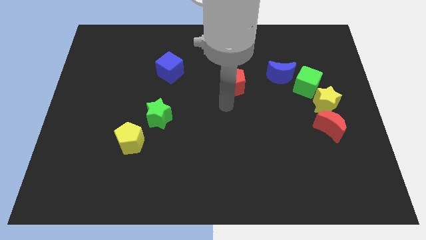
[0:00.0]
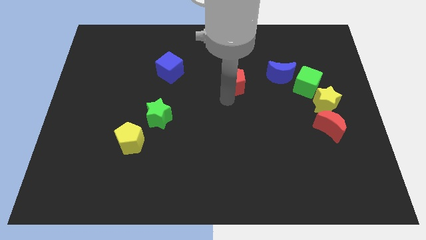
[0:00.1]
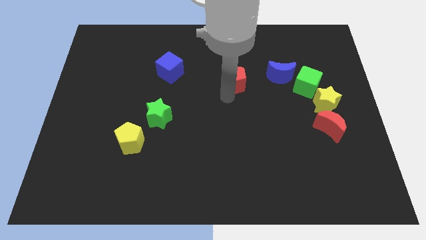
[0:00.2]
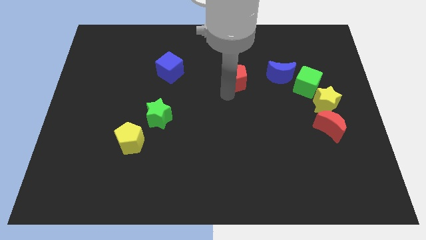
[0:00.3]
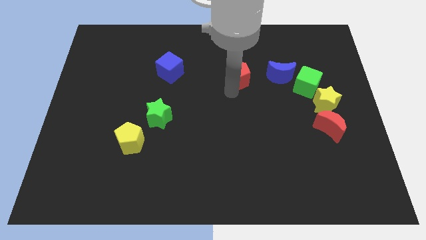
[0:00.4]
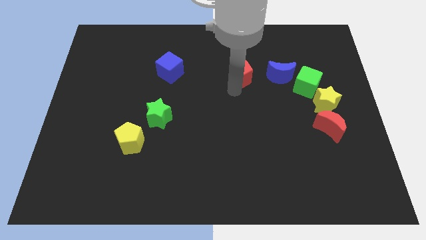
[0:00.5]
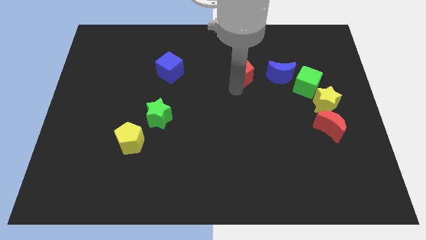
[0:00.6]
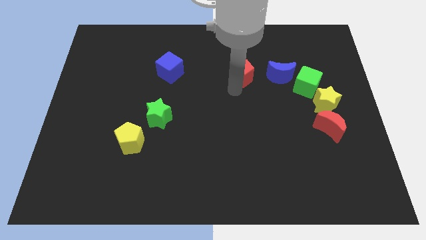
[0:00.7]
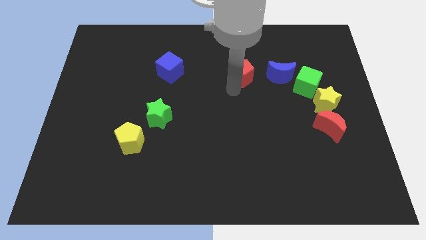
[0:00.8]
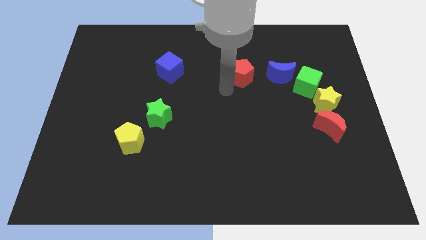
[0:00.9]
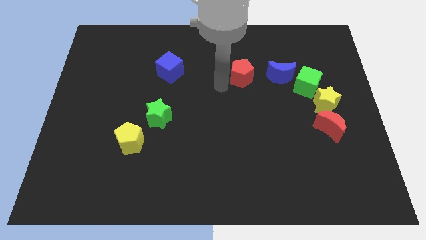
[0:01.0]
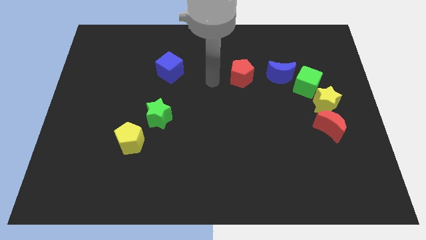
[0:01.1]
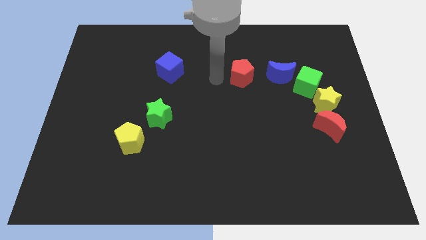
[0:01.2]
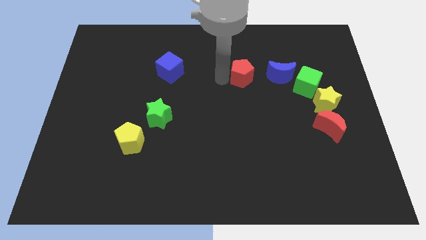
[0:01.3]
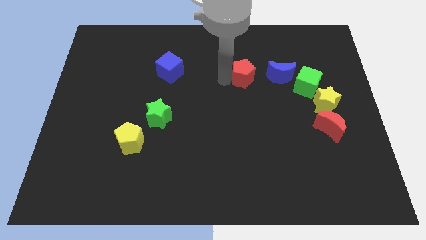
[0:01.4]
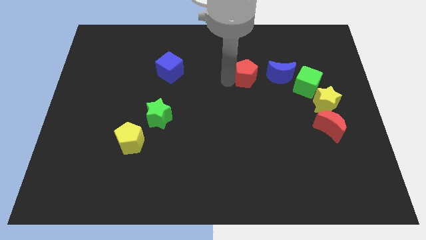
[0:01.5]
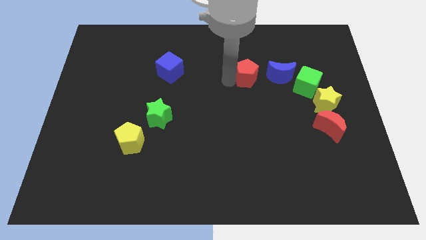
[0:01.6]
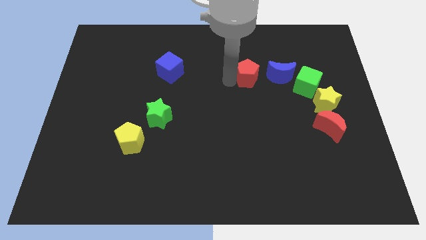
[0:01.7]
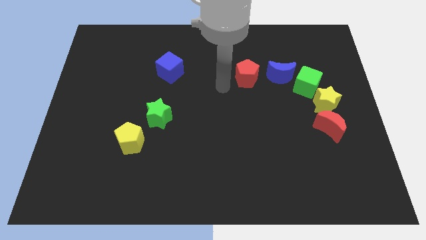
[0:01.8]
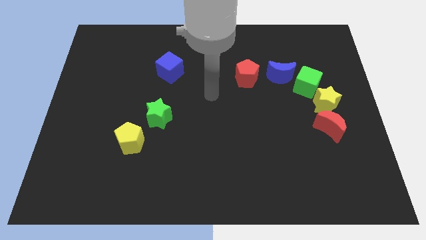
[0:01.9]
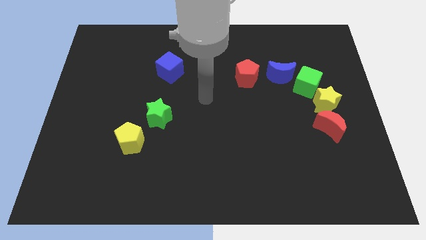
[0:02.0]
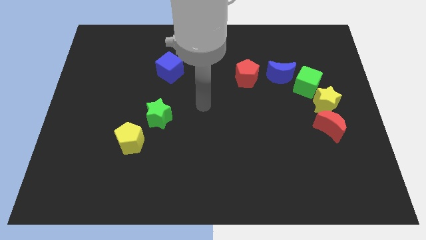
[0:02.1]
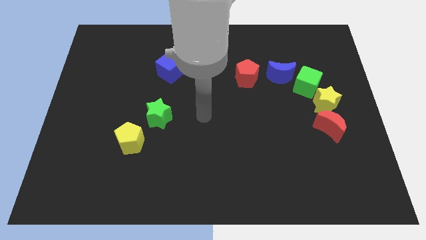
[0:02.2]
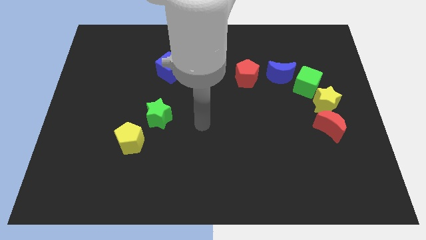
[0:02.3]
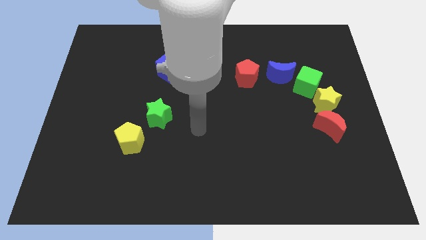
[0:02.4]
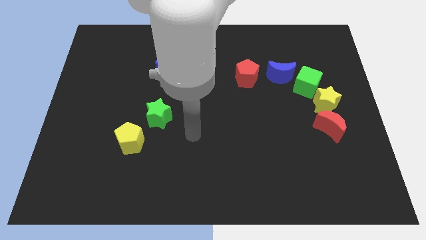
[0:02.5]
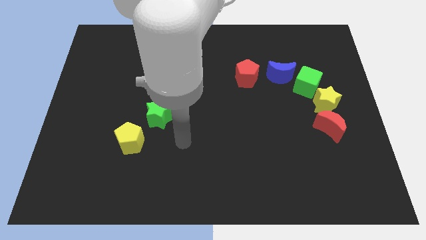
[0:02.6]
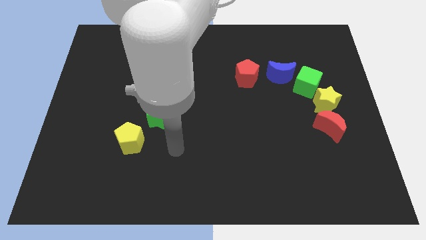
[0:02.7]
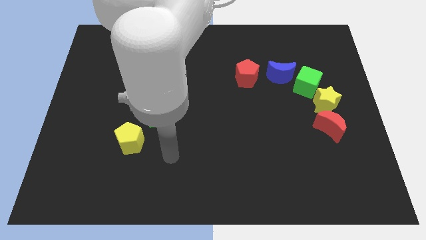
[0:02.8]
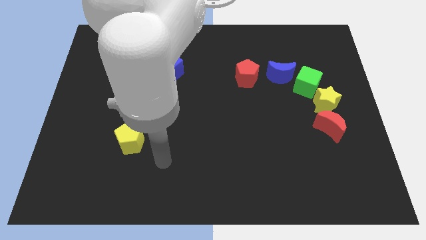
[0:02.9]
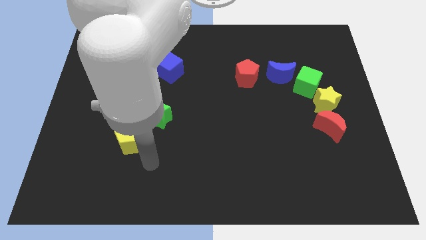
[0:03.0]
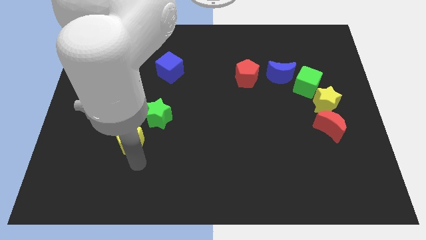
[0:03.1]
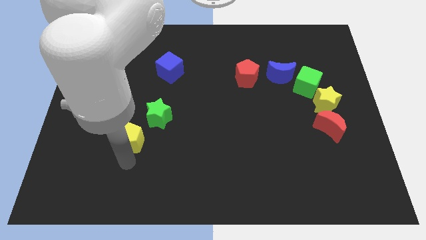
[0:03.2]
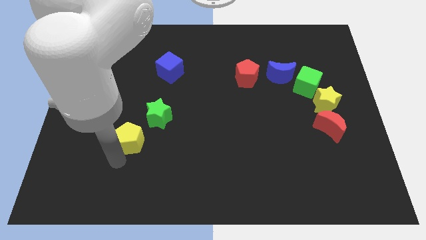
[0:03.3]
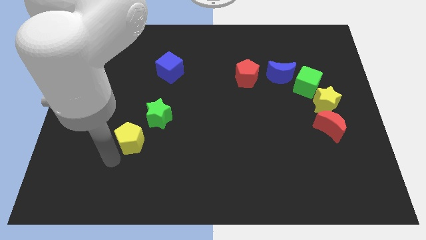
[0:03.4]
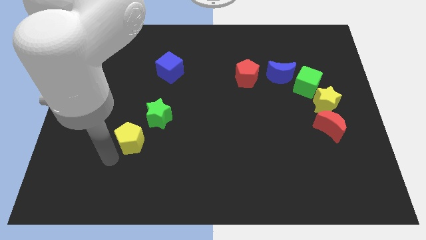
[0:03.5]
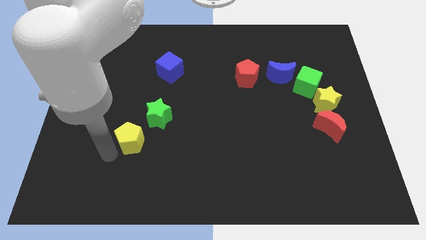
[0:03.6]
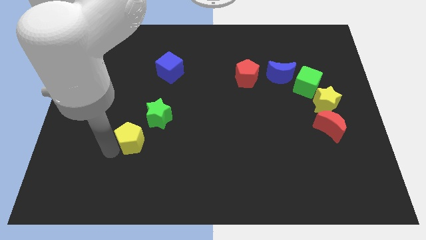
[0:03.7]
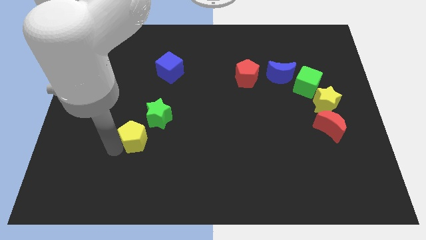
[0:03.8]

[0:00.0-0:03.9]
move your arm away from the red pentagon

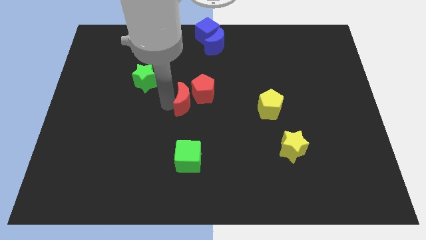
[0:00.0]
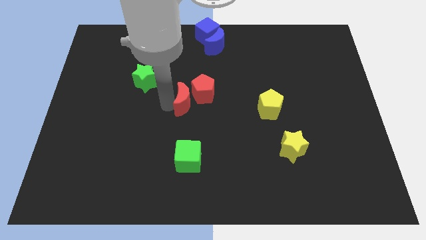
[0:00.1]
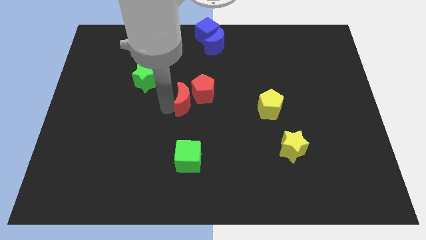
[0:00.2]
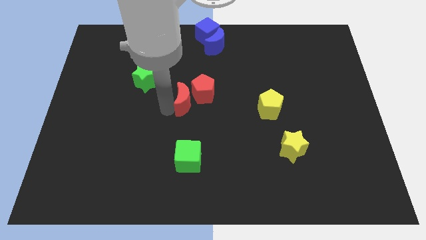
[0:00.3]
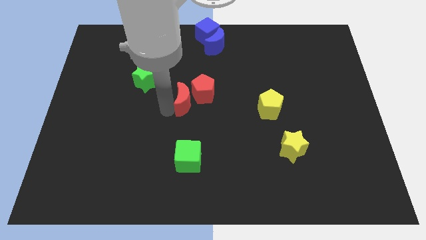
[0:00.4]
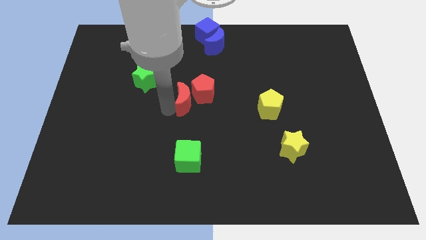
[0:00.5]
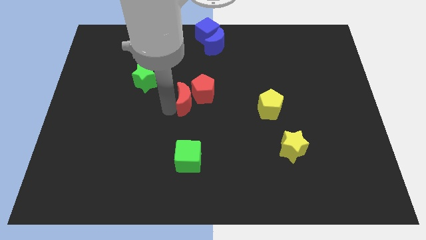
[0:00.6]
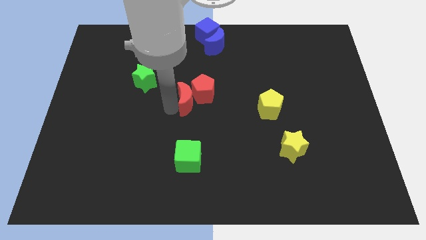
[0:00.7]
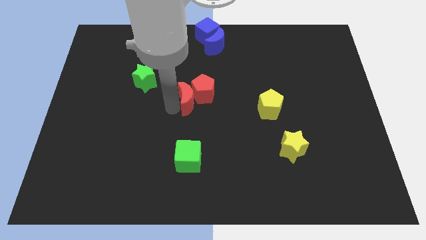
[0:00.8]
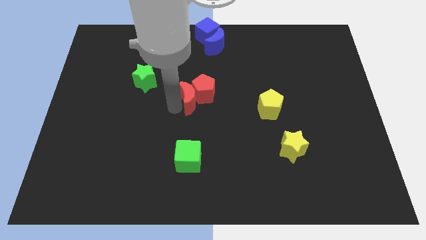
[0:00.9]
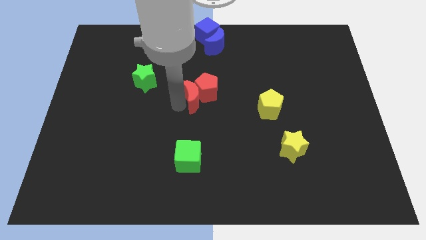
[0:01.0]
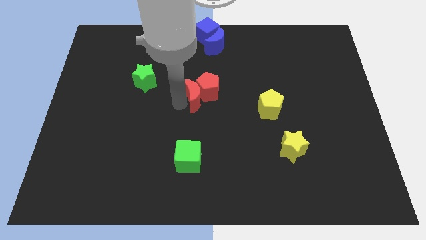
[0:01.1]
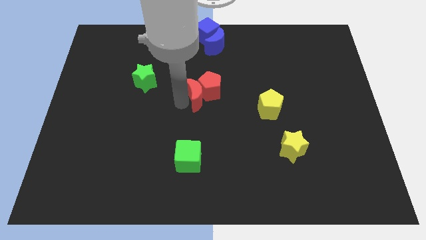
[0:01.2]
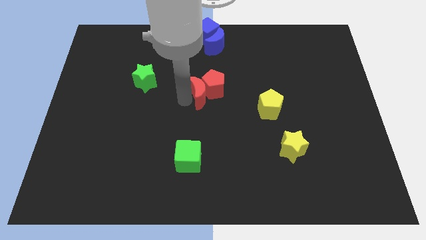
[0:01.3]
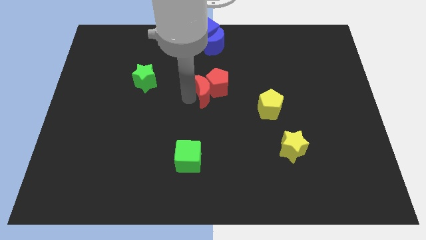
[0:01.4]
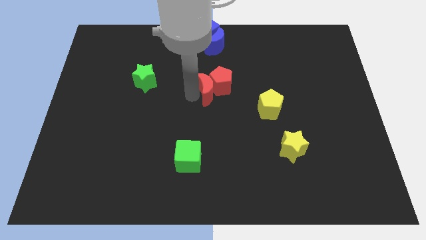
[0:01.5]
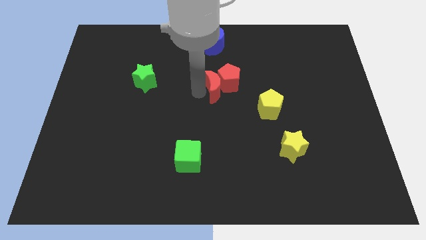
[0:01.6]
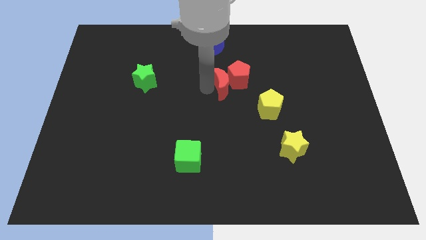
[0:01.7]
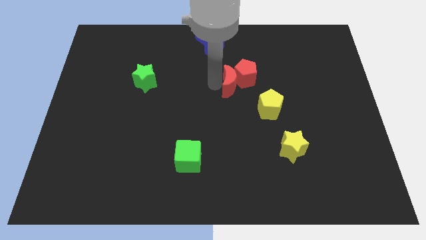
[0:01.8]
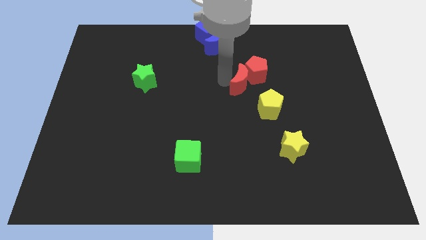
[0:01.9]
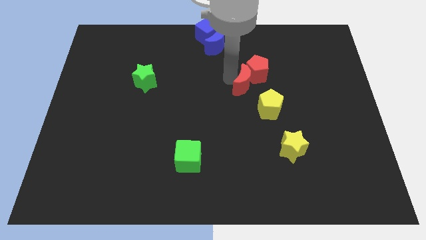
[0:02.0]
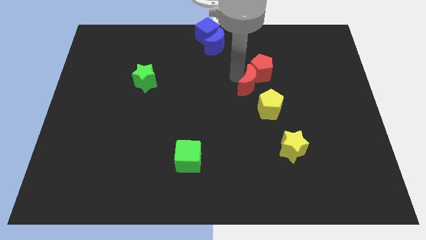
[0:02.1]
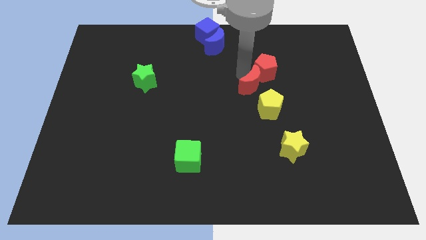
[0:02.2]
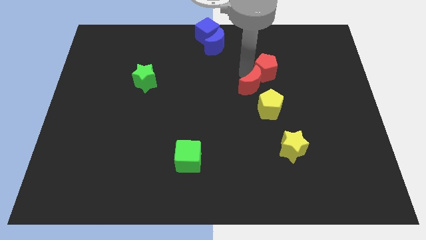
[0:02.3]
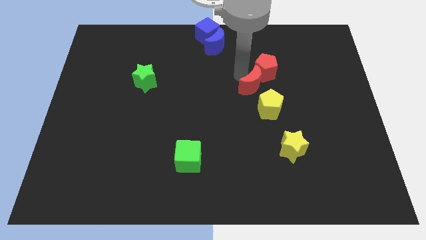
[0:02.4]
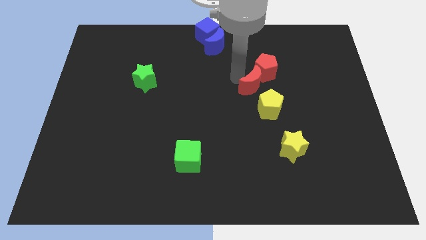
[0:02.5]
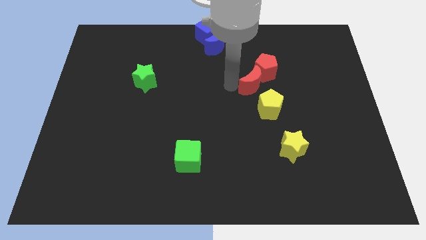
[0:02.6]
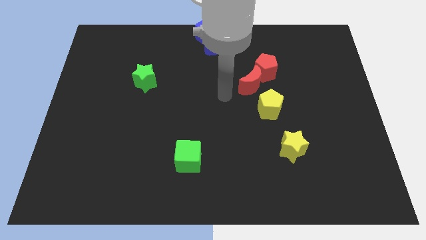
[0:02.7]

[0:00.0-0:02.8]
move the red blocks to the top of the yellow pentagon

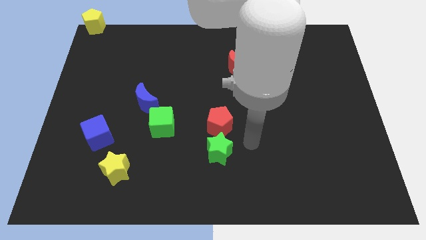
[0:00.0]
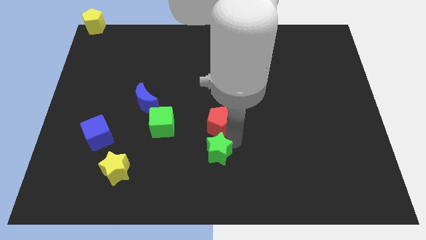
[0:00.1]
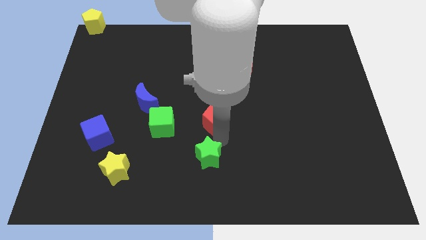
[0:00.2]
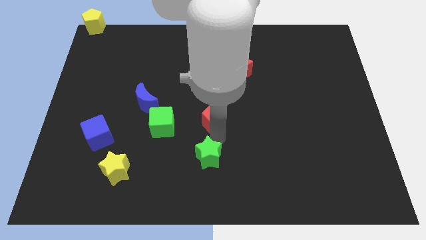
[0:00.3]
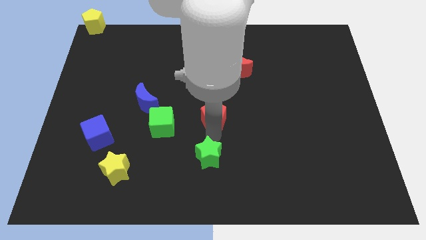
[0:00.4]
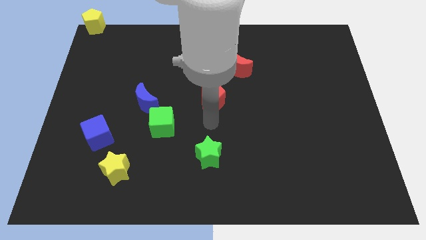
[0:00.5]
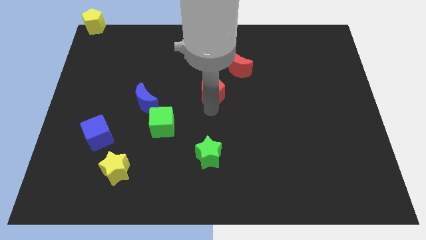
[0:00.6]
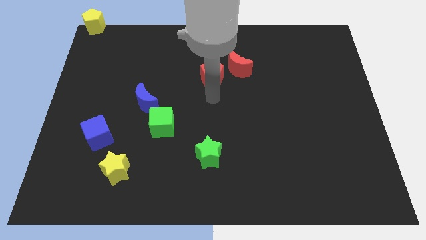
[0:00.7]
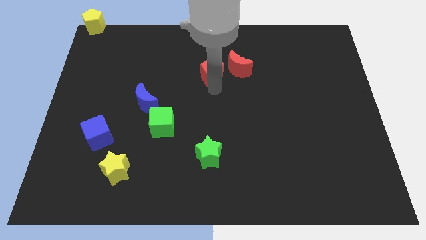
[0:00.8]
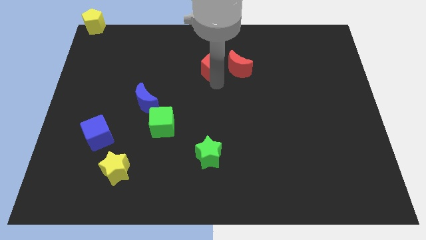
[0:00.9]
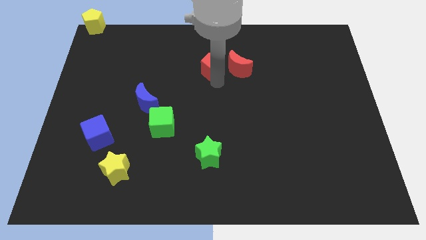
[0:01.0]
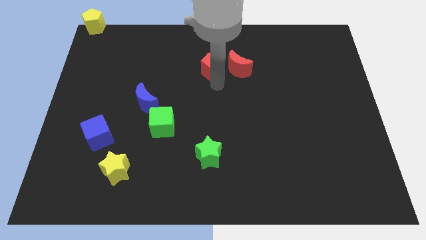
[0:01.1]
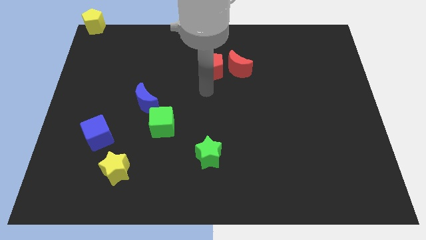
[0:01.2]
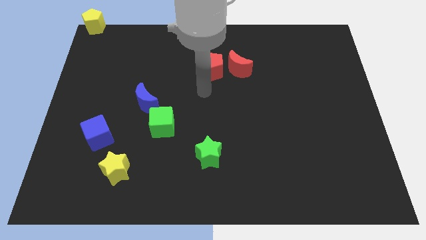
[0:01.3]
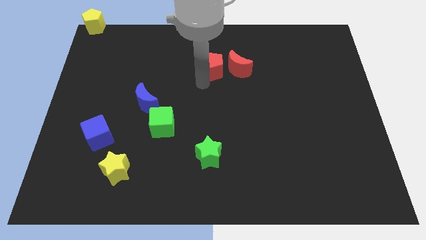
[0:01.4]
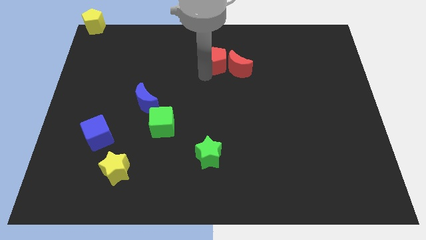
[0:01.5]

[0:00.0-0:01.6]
place red pentagon beside red crescent

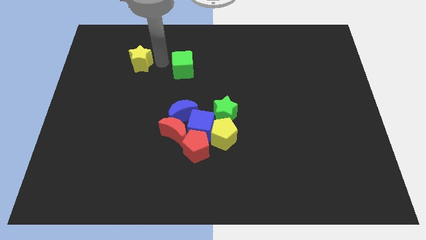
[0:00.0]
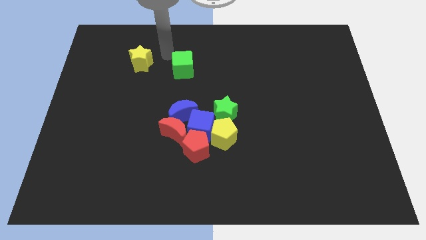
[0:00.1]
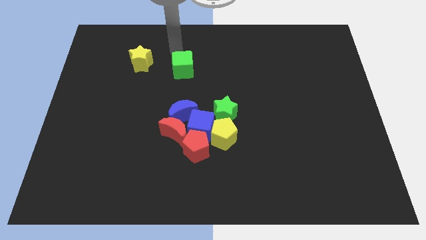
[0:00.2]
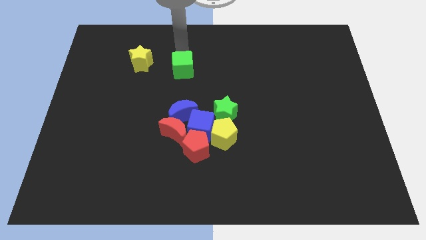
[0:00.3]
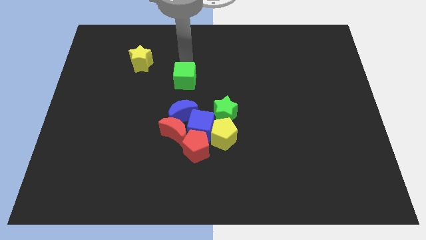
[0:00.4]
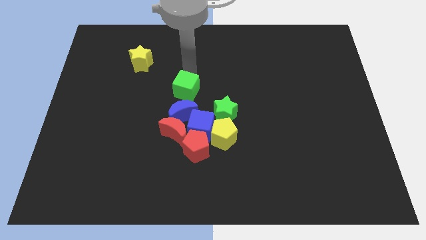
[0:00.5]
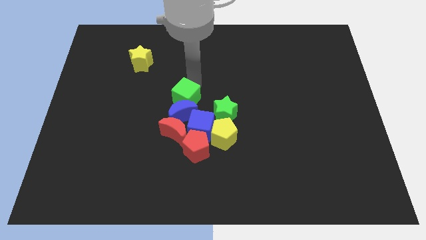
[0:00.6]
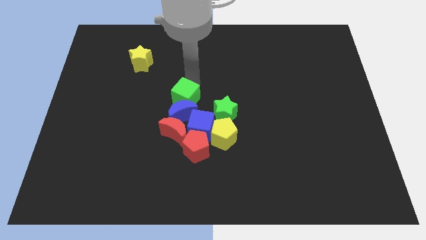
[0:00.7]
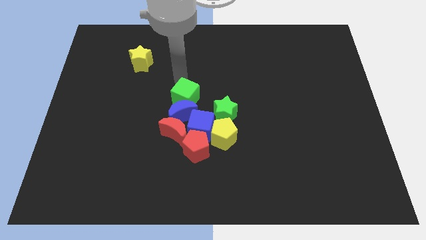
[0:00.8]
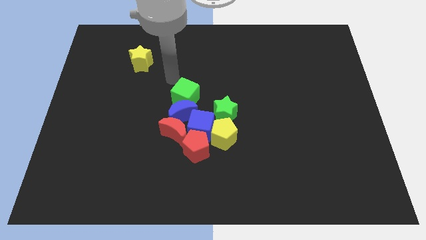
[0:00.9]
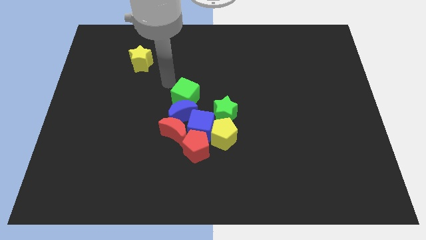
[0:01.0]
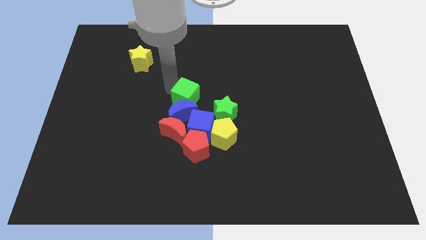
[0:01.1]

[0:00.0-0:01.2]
push the green cube to the top of the blue crescent
